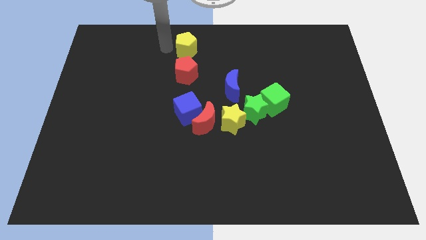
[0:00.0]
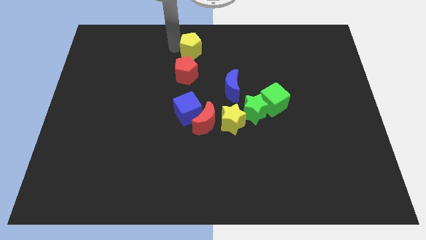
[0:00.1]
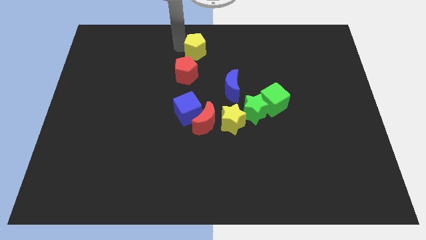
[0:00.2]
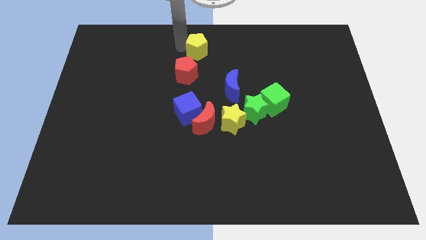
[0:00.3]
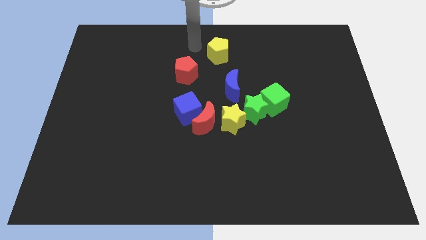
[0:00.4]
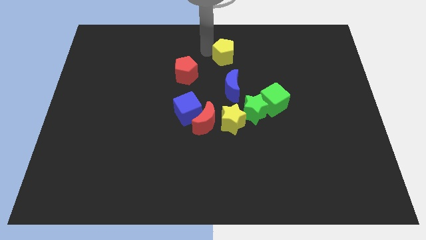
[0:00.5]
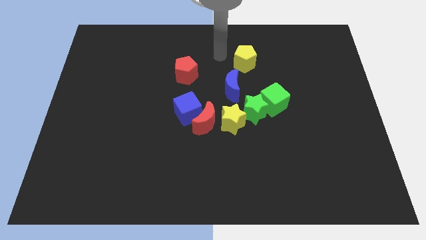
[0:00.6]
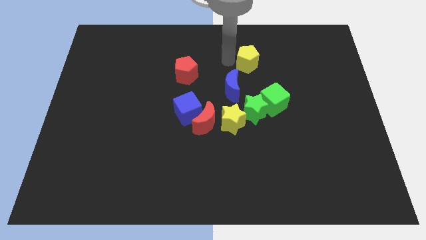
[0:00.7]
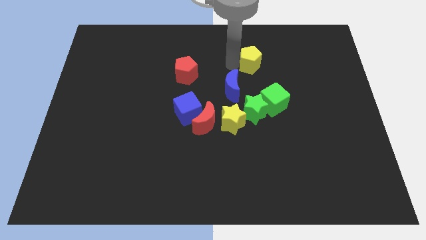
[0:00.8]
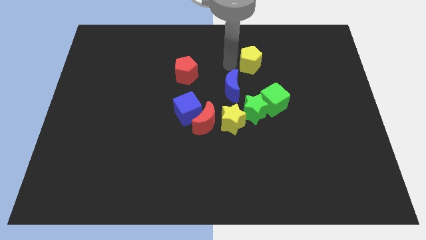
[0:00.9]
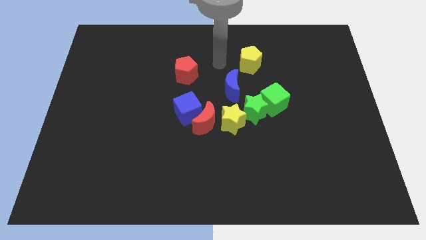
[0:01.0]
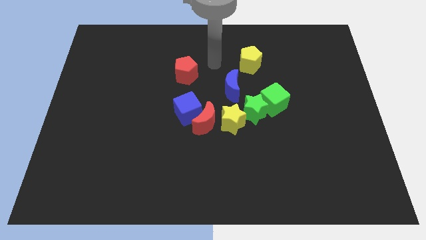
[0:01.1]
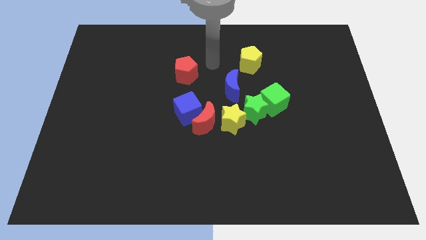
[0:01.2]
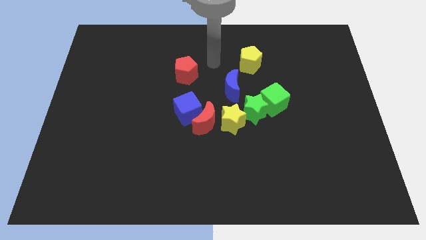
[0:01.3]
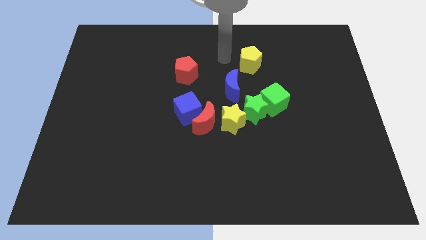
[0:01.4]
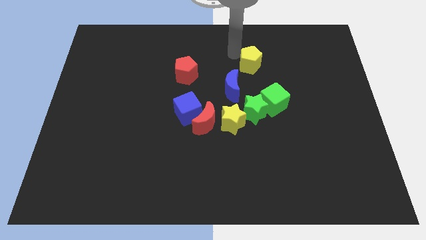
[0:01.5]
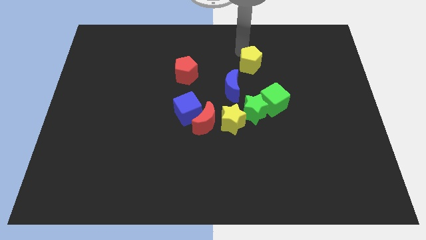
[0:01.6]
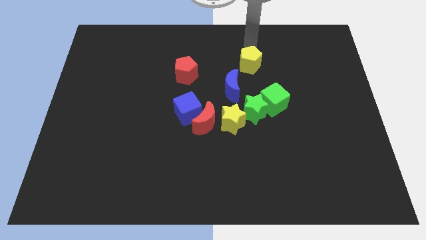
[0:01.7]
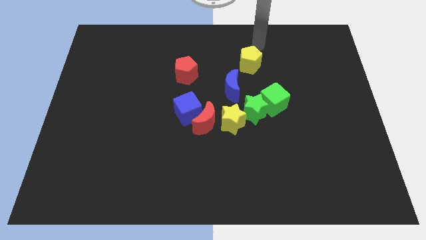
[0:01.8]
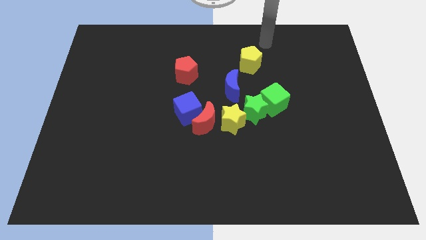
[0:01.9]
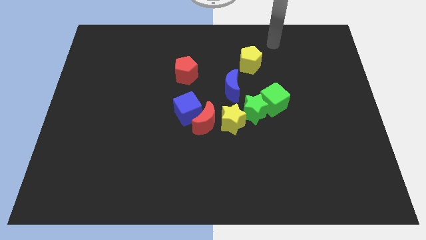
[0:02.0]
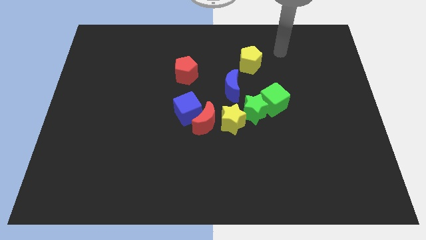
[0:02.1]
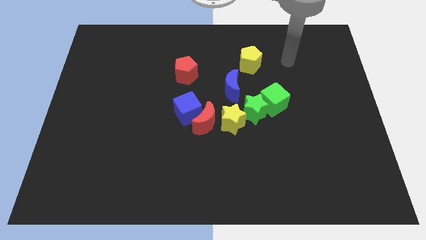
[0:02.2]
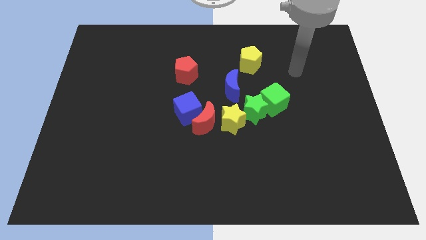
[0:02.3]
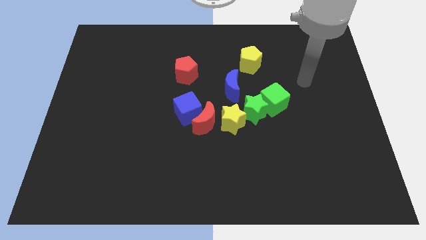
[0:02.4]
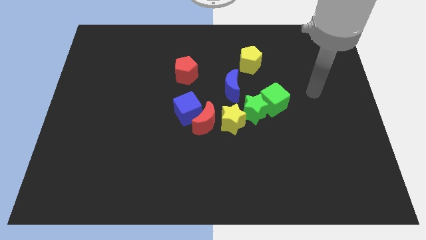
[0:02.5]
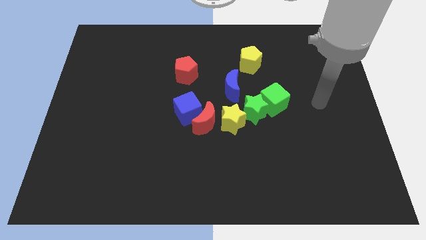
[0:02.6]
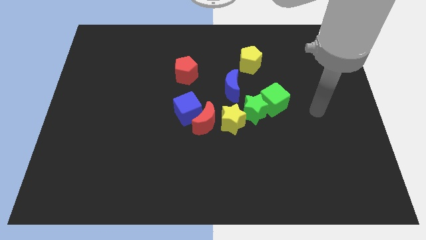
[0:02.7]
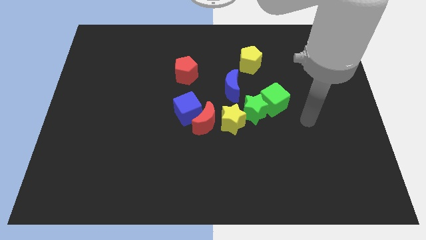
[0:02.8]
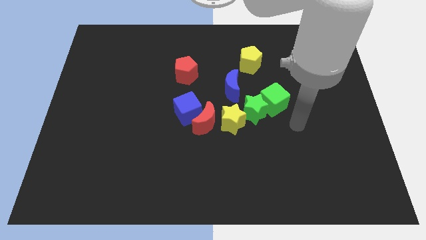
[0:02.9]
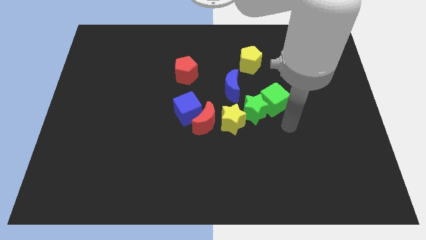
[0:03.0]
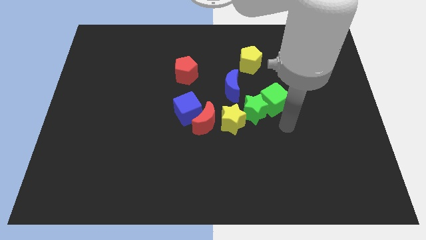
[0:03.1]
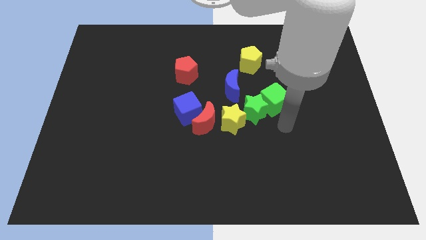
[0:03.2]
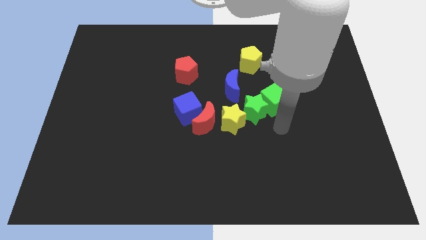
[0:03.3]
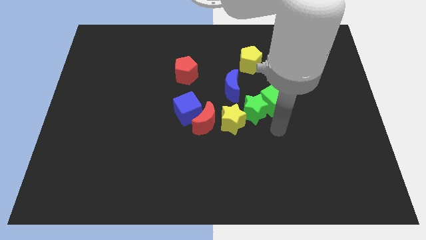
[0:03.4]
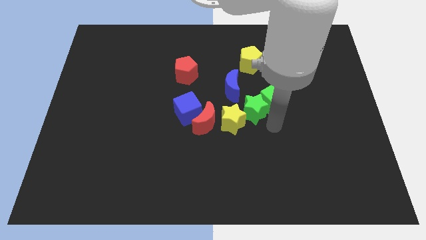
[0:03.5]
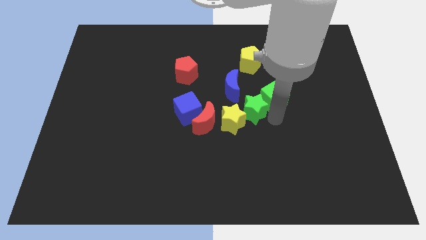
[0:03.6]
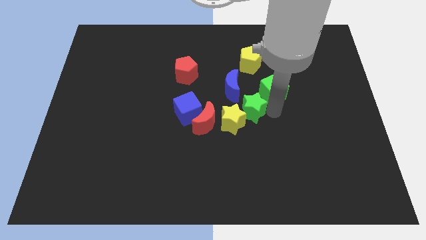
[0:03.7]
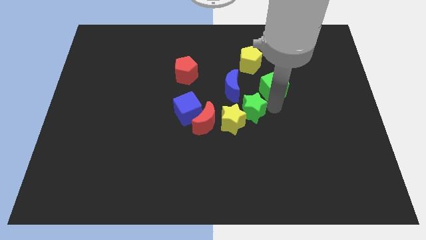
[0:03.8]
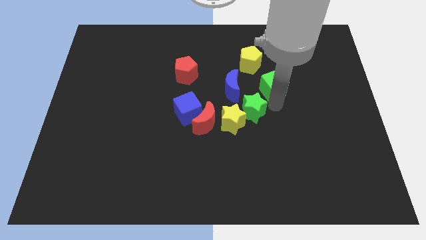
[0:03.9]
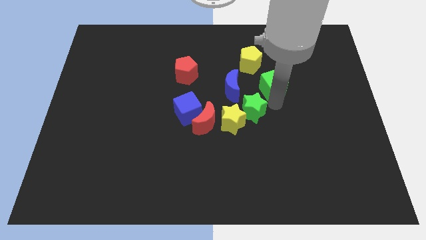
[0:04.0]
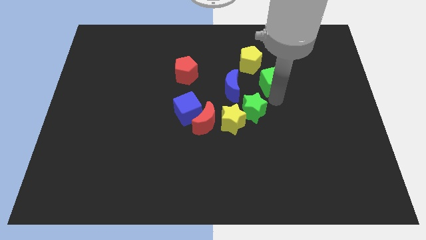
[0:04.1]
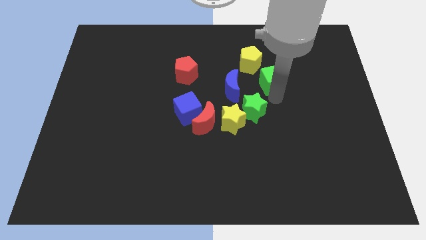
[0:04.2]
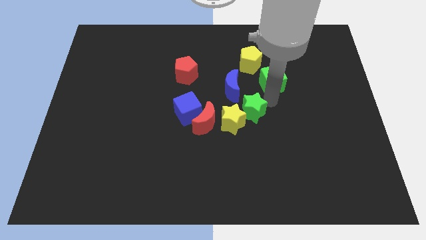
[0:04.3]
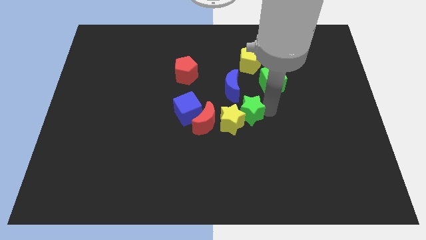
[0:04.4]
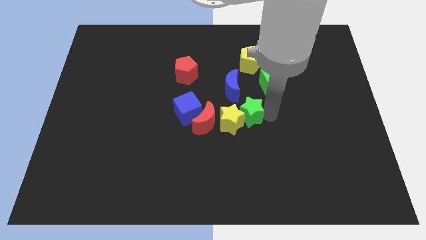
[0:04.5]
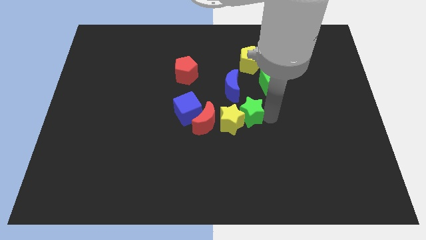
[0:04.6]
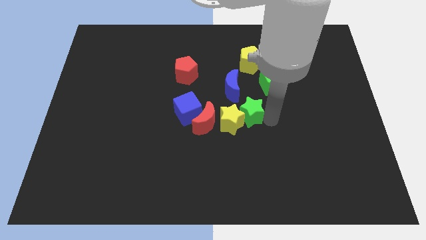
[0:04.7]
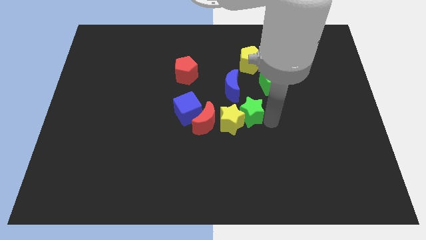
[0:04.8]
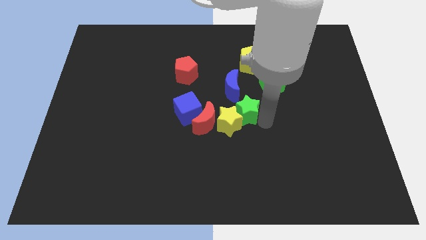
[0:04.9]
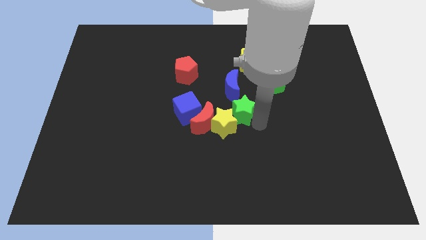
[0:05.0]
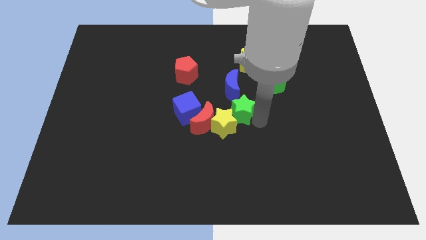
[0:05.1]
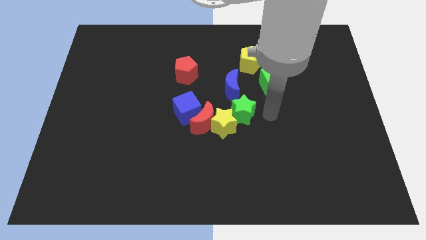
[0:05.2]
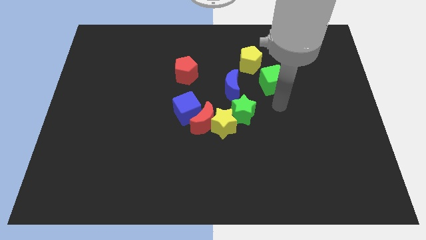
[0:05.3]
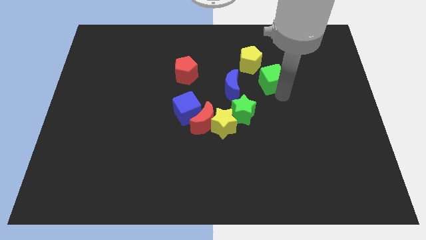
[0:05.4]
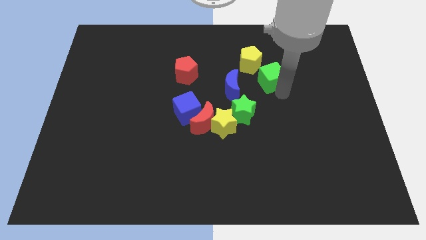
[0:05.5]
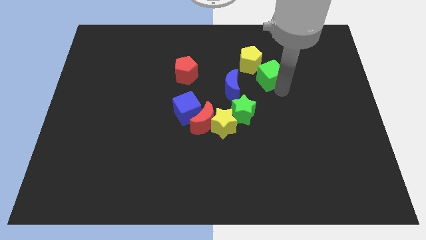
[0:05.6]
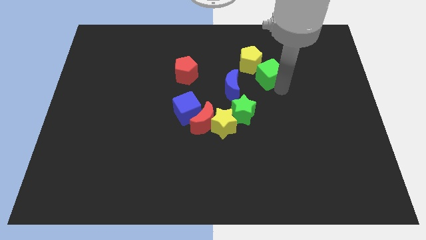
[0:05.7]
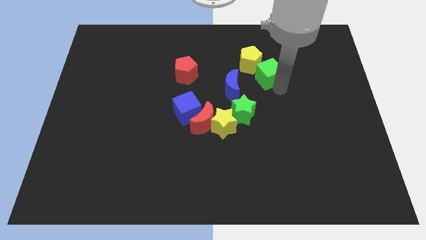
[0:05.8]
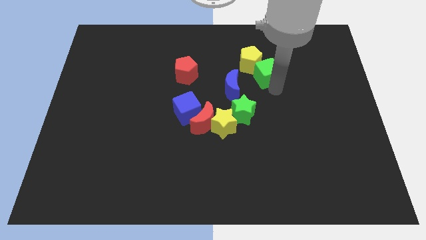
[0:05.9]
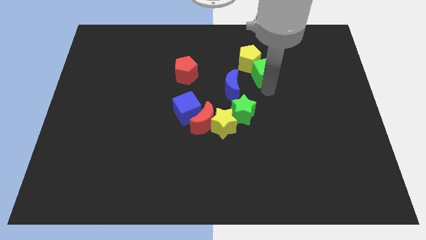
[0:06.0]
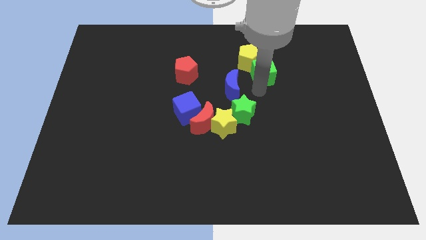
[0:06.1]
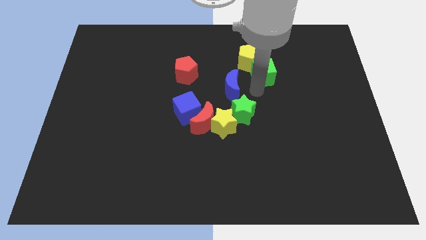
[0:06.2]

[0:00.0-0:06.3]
put the yellow pentagon and green cube together at the top right side of the blue crescent

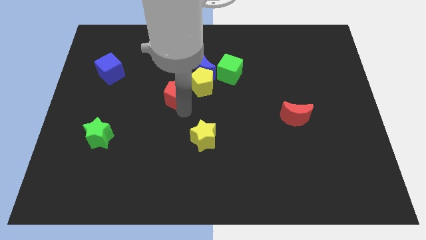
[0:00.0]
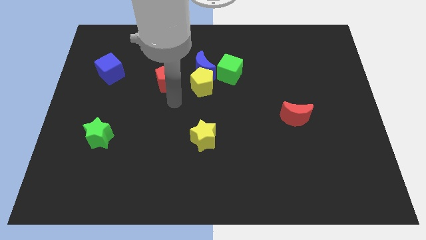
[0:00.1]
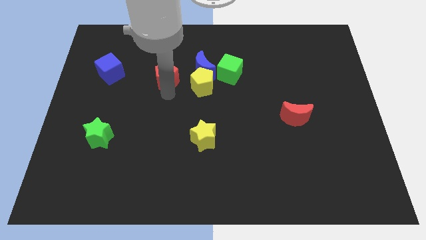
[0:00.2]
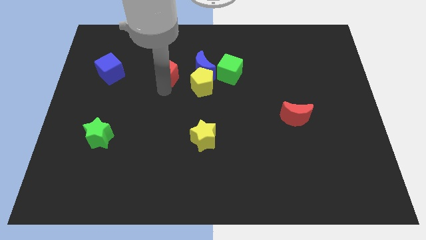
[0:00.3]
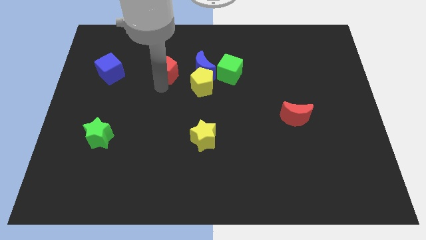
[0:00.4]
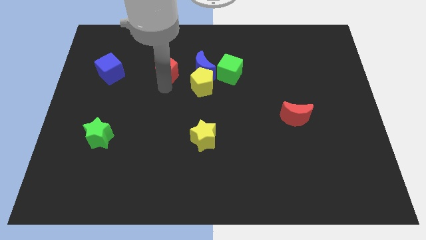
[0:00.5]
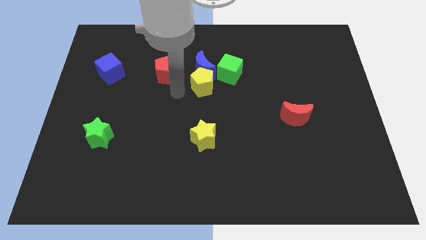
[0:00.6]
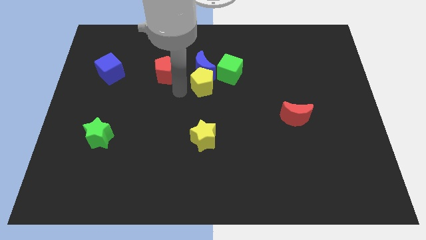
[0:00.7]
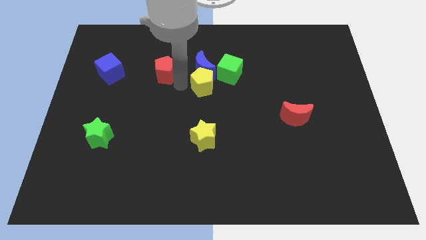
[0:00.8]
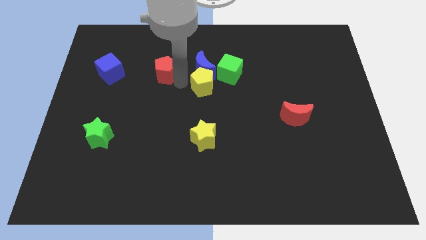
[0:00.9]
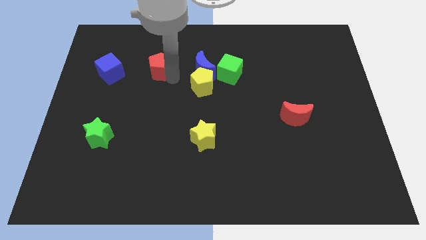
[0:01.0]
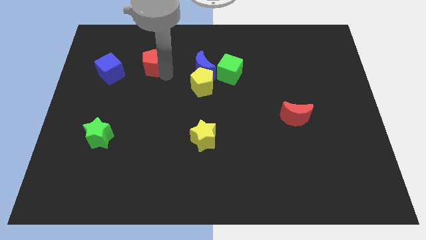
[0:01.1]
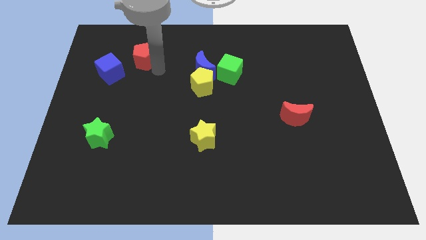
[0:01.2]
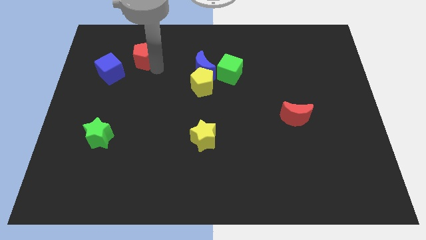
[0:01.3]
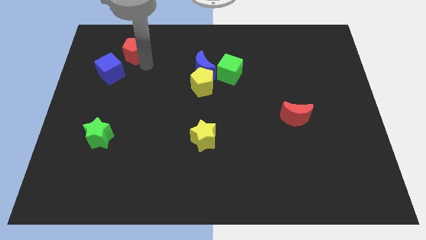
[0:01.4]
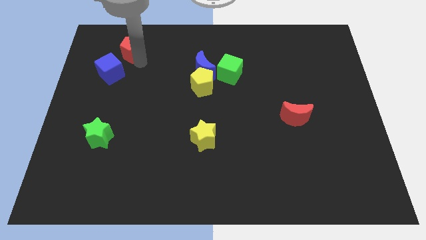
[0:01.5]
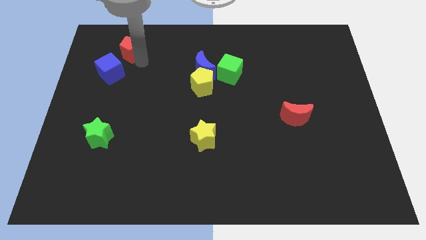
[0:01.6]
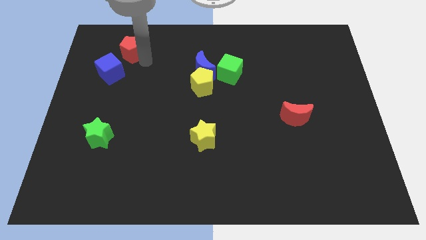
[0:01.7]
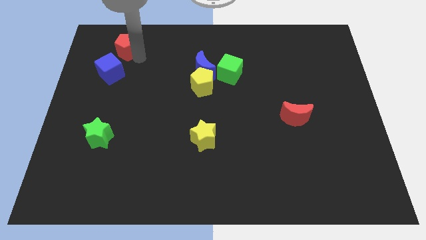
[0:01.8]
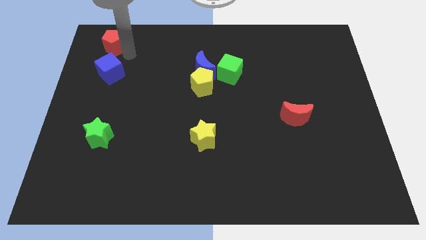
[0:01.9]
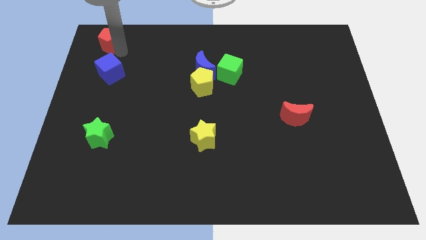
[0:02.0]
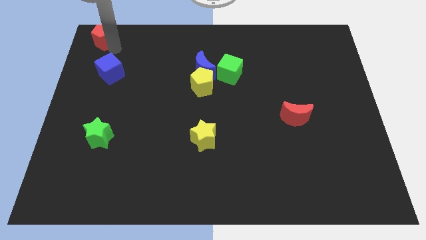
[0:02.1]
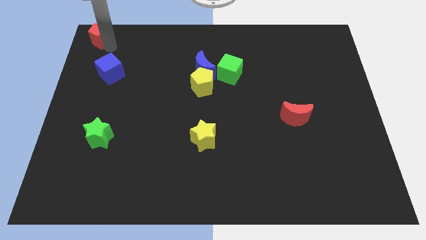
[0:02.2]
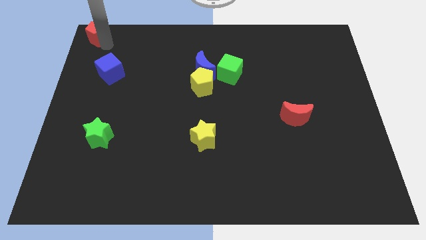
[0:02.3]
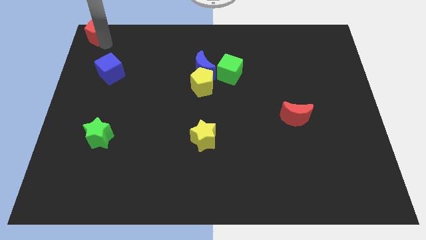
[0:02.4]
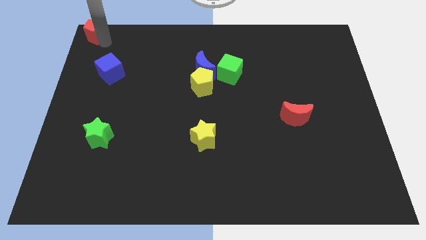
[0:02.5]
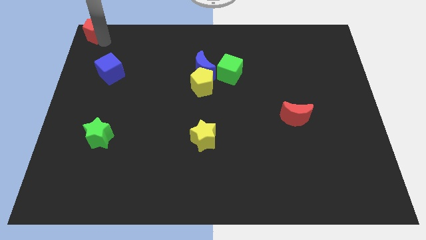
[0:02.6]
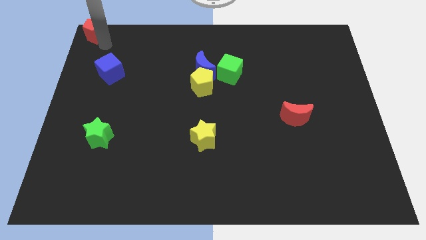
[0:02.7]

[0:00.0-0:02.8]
push the red pentagon to the top left of the board
